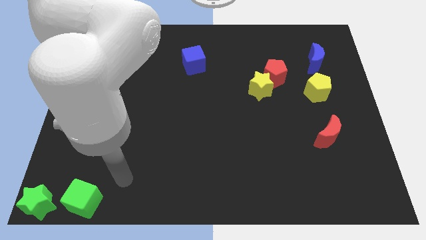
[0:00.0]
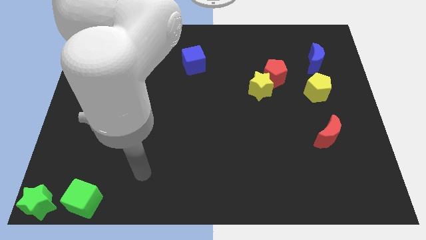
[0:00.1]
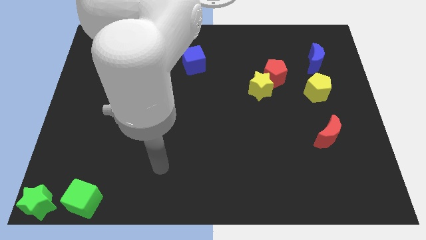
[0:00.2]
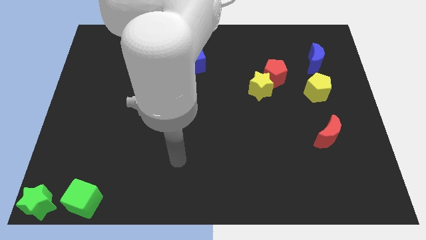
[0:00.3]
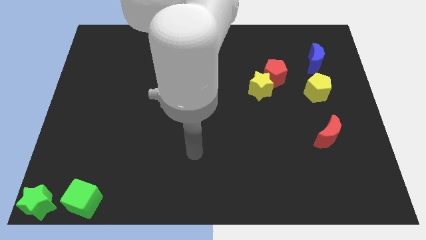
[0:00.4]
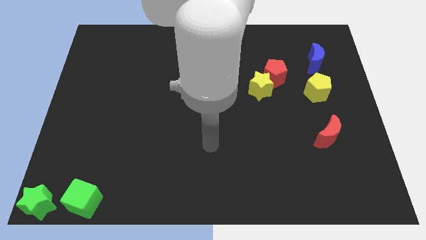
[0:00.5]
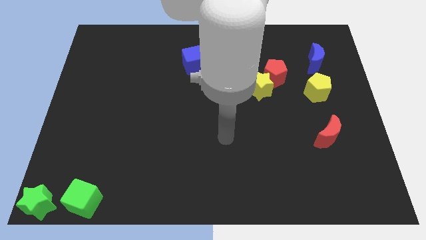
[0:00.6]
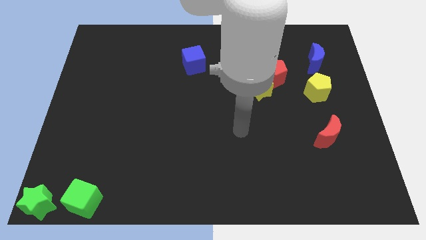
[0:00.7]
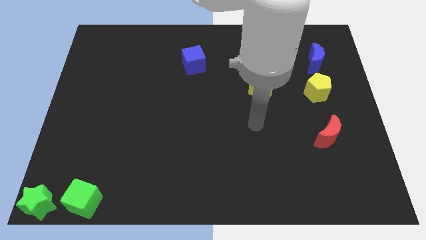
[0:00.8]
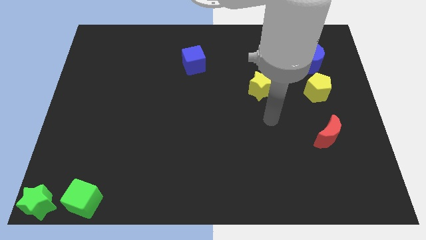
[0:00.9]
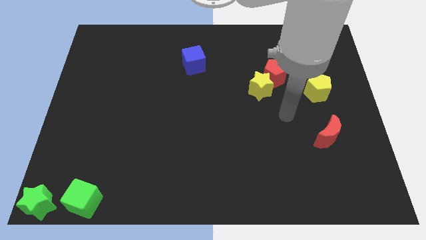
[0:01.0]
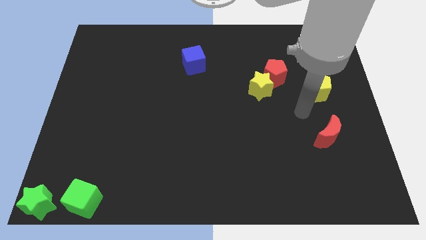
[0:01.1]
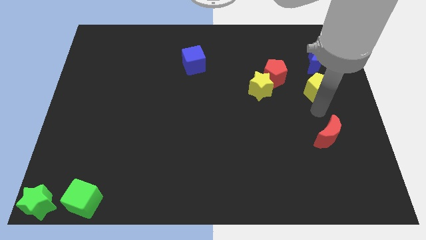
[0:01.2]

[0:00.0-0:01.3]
point your hand below the yellow pentagon

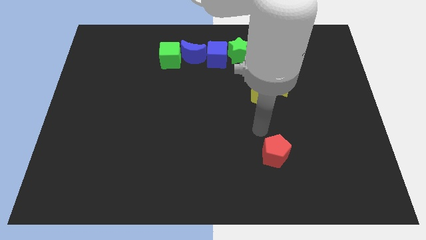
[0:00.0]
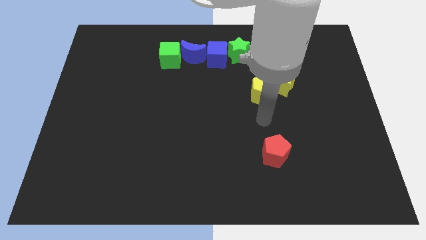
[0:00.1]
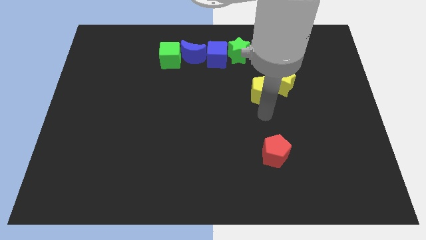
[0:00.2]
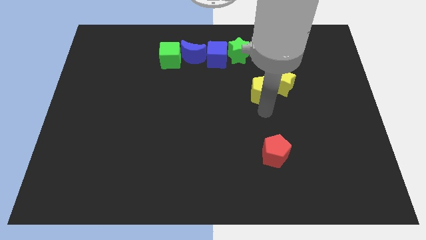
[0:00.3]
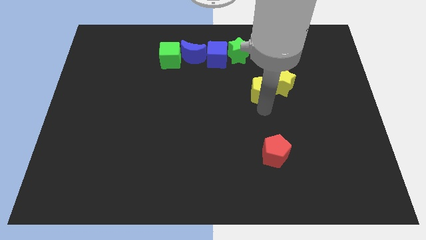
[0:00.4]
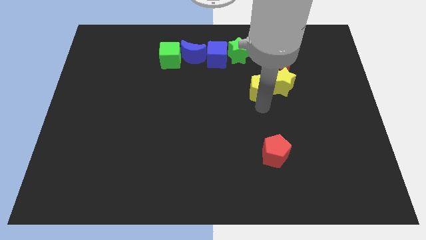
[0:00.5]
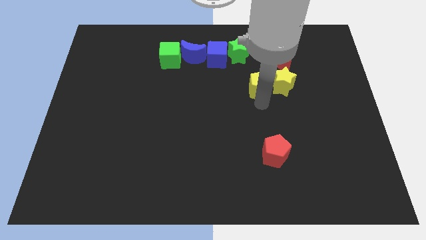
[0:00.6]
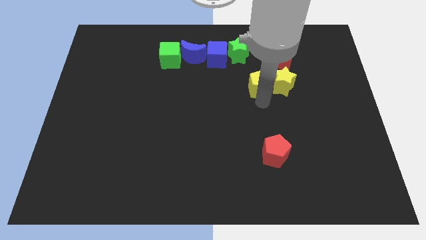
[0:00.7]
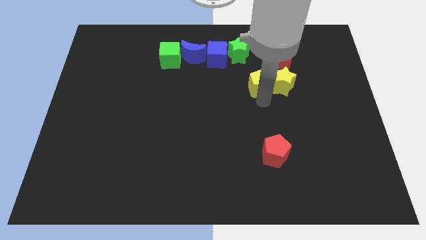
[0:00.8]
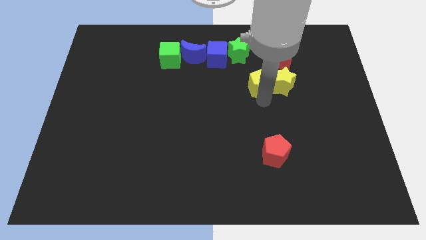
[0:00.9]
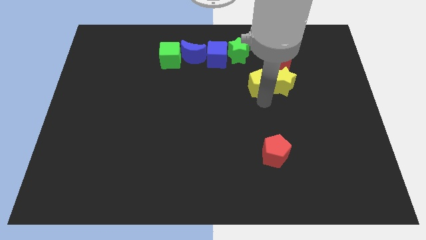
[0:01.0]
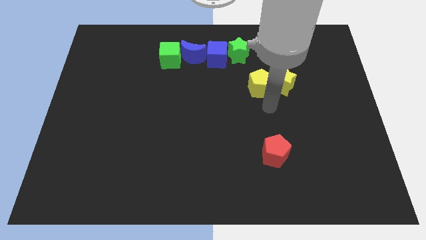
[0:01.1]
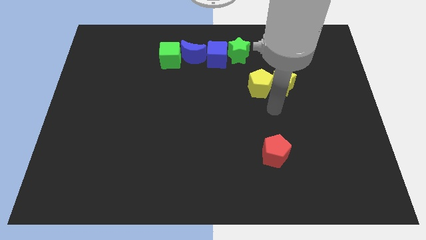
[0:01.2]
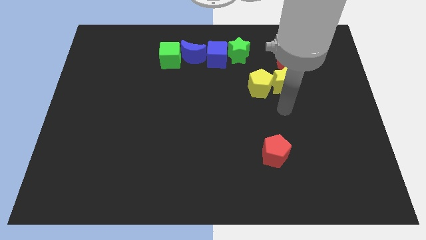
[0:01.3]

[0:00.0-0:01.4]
move the yellow pentagon to the left of the yellow star

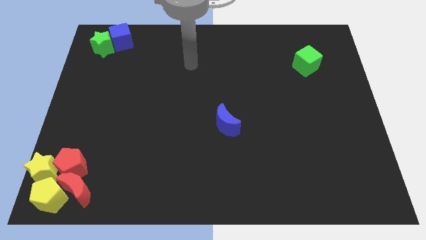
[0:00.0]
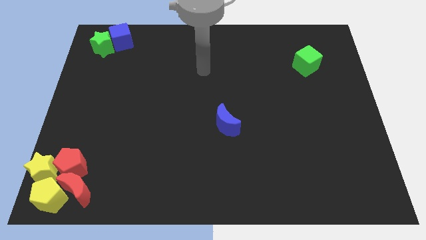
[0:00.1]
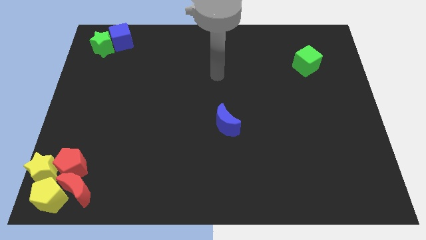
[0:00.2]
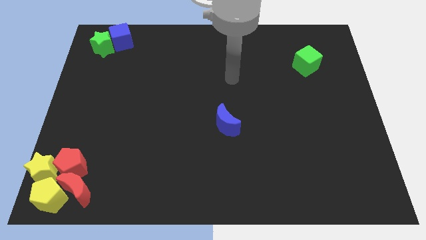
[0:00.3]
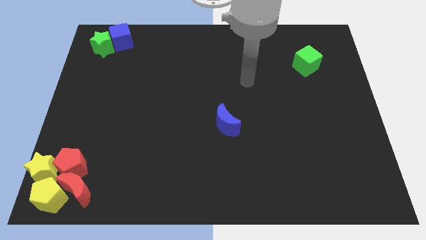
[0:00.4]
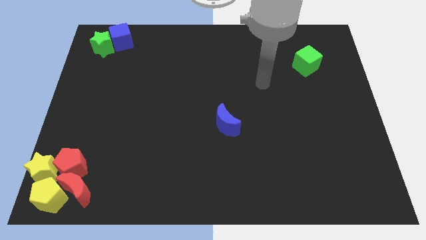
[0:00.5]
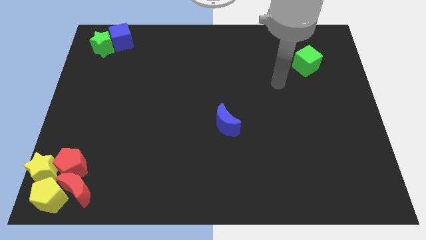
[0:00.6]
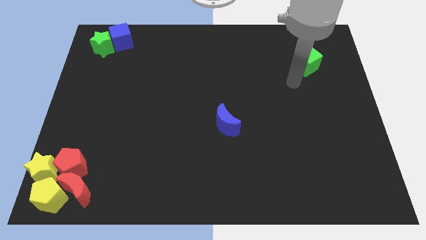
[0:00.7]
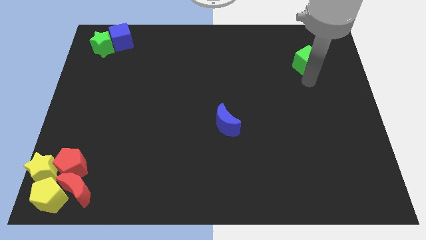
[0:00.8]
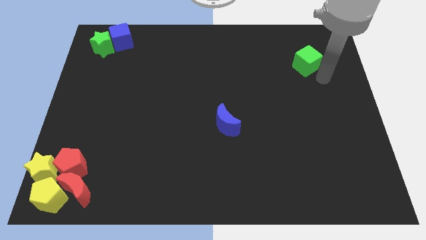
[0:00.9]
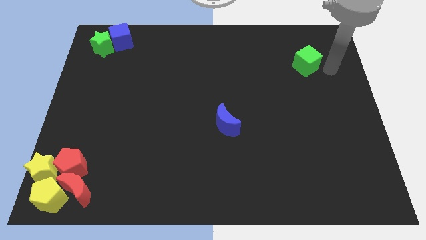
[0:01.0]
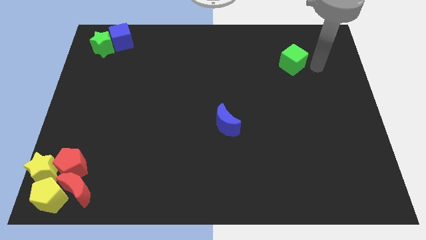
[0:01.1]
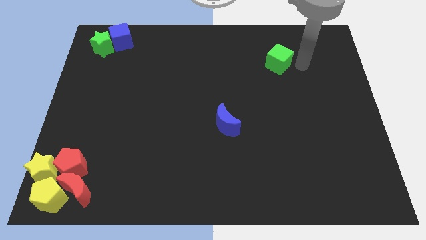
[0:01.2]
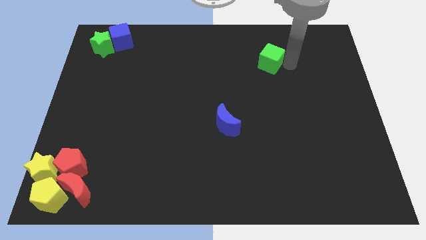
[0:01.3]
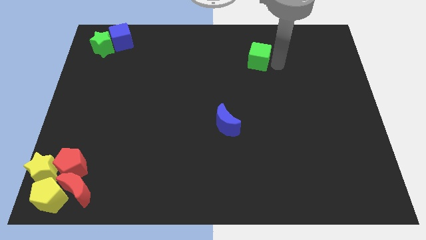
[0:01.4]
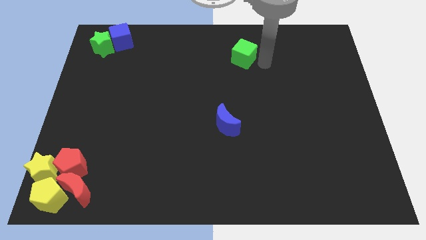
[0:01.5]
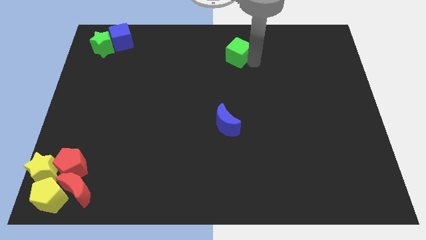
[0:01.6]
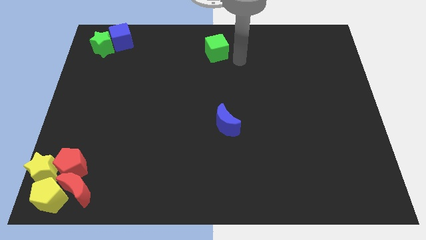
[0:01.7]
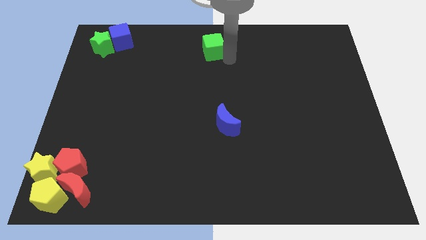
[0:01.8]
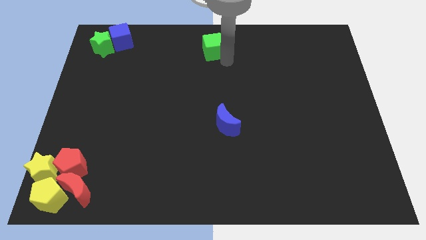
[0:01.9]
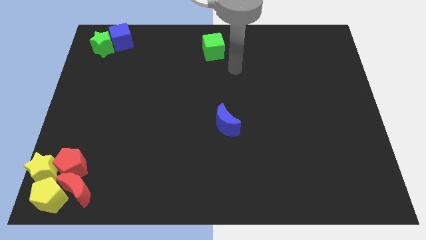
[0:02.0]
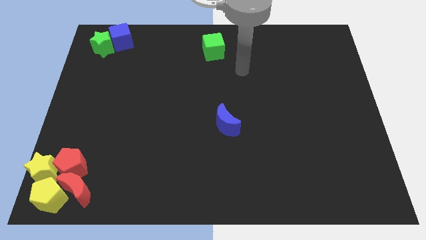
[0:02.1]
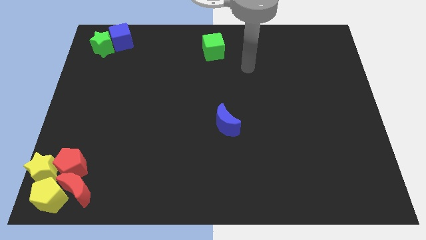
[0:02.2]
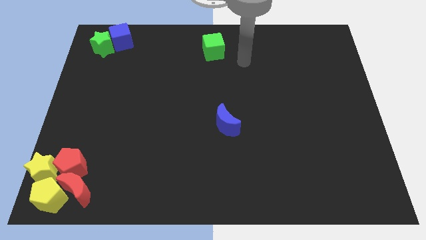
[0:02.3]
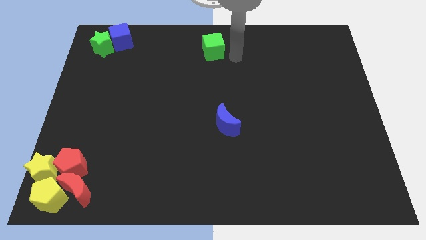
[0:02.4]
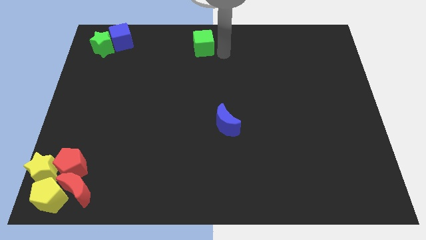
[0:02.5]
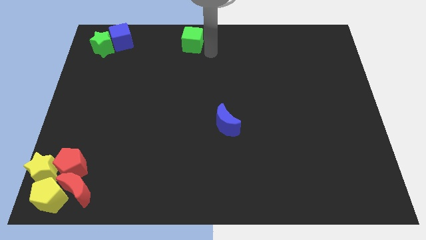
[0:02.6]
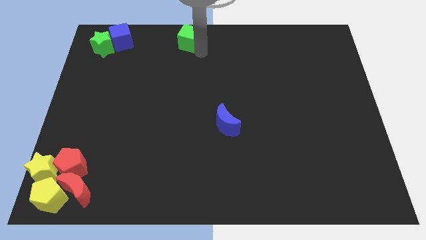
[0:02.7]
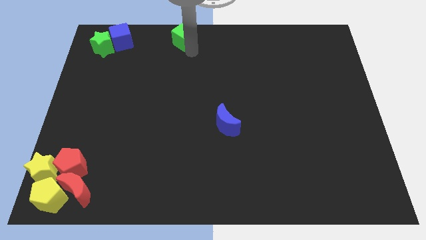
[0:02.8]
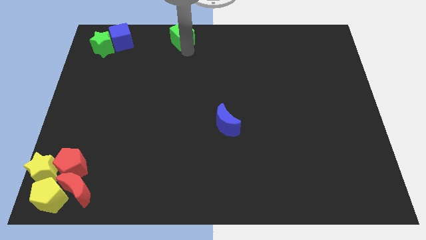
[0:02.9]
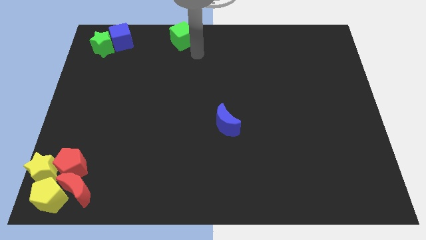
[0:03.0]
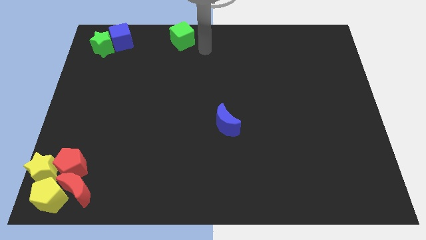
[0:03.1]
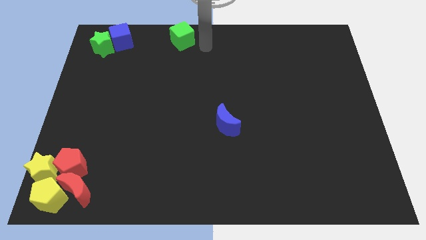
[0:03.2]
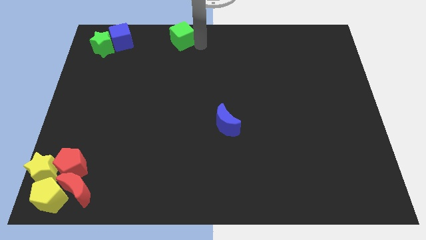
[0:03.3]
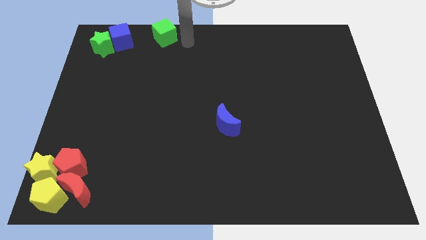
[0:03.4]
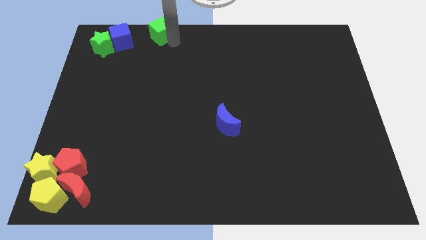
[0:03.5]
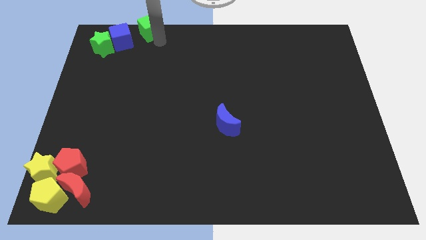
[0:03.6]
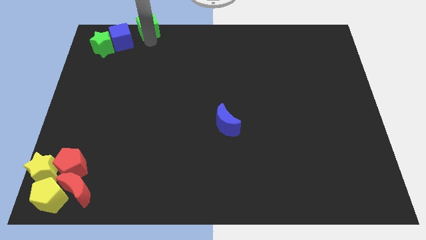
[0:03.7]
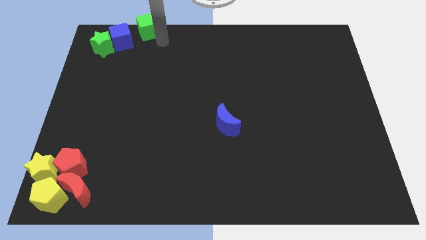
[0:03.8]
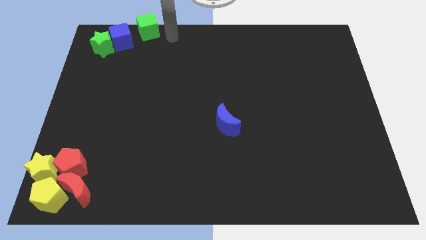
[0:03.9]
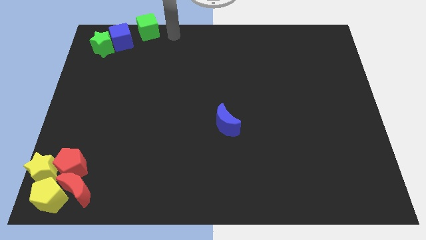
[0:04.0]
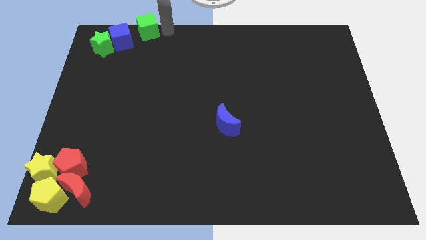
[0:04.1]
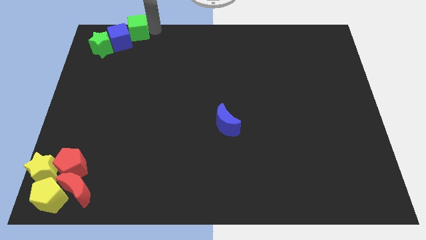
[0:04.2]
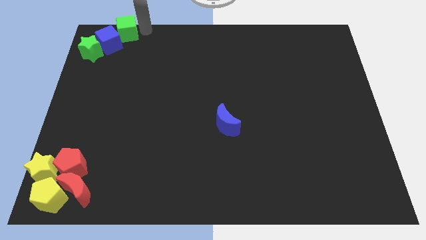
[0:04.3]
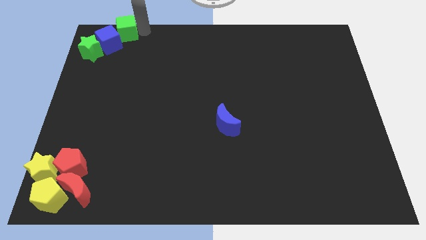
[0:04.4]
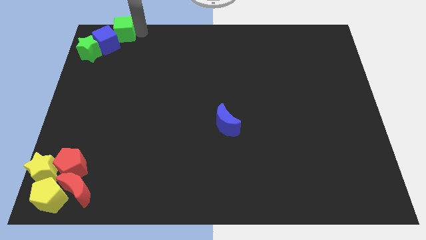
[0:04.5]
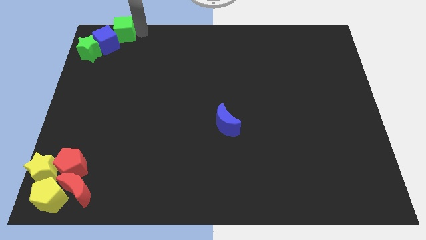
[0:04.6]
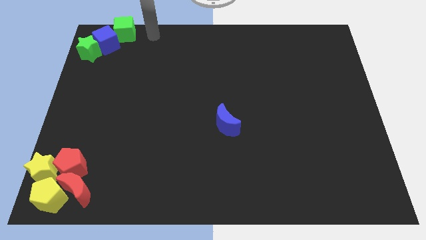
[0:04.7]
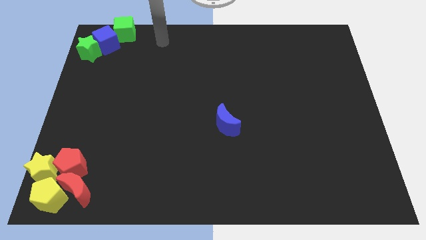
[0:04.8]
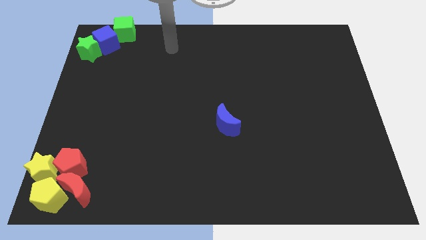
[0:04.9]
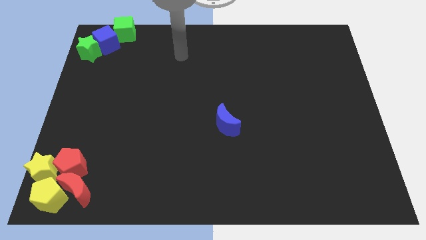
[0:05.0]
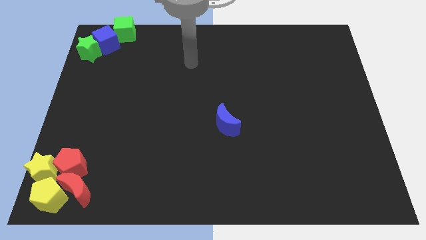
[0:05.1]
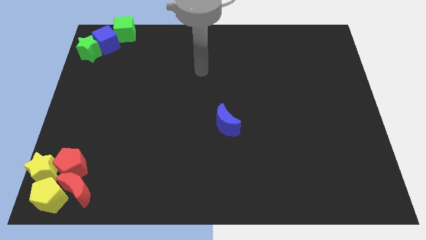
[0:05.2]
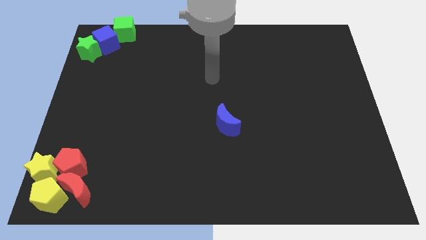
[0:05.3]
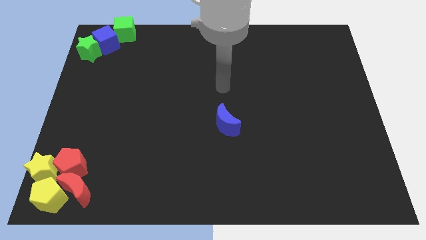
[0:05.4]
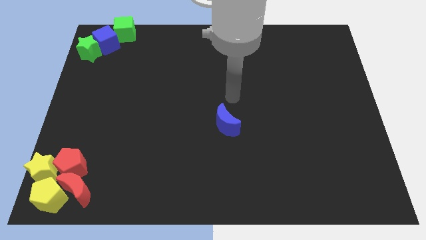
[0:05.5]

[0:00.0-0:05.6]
push the green cube into the blue cube

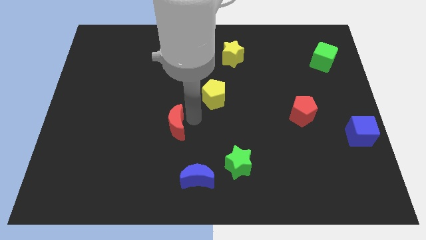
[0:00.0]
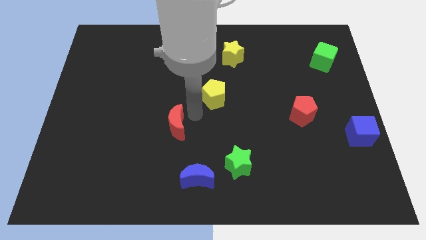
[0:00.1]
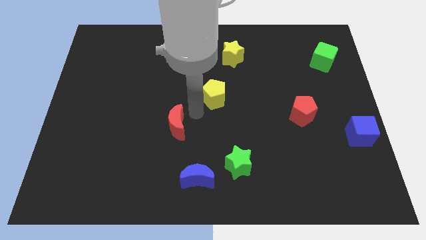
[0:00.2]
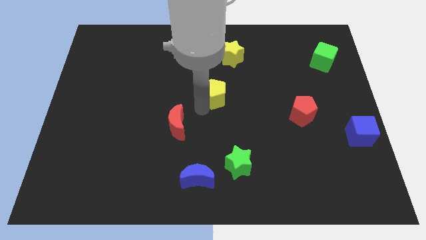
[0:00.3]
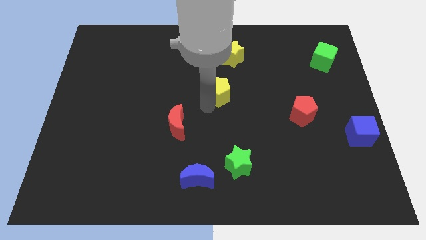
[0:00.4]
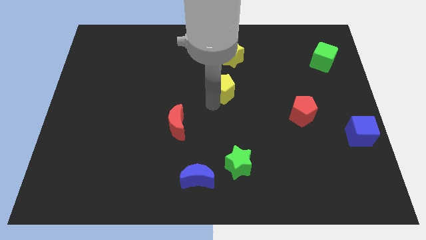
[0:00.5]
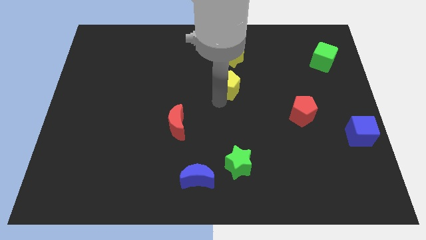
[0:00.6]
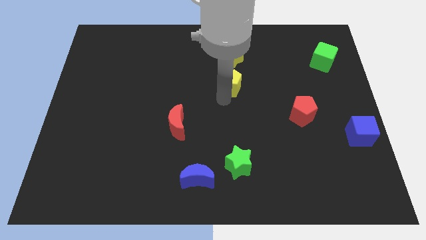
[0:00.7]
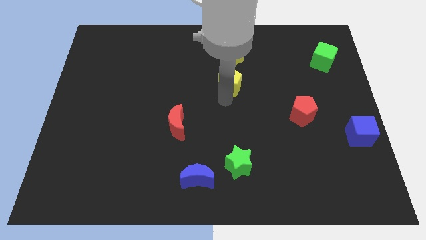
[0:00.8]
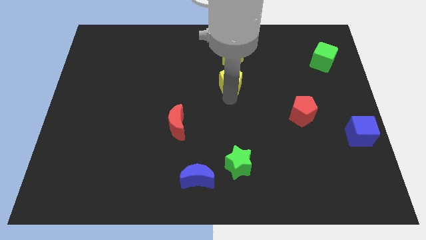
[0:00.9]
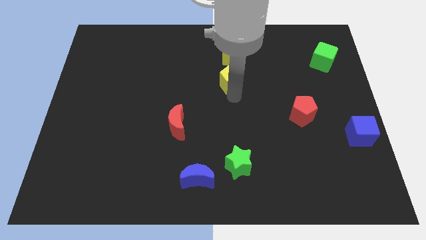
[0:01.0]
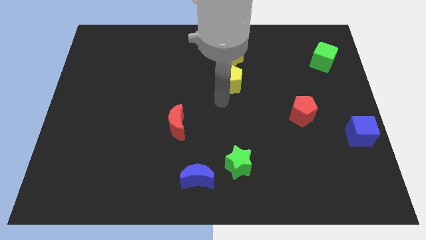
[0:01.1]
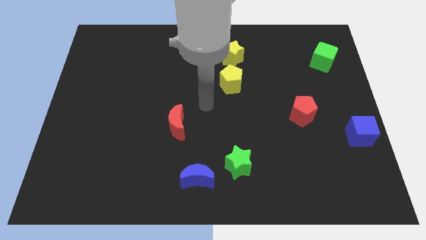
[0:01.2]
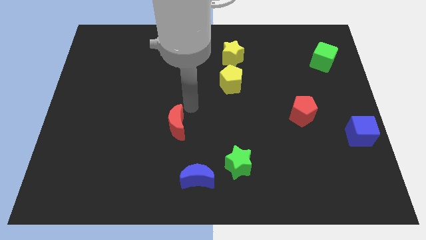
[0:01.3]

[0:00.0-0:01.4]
place the yellow pentagon below the yellow star
